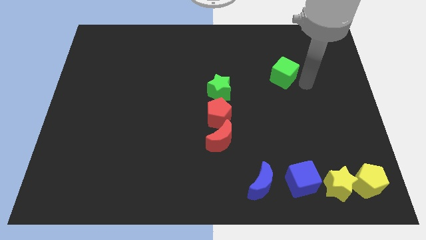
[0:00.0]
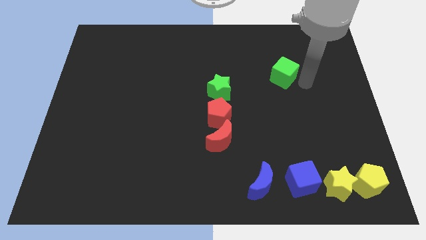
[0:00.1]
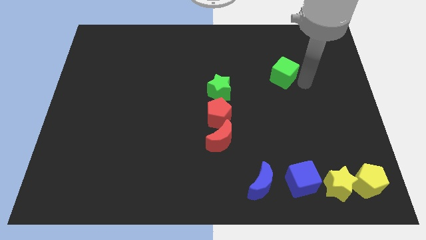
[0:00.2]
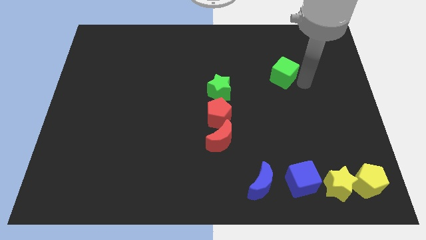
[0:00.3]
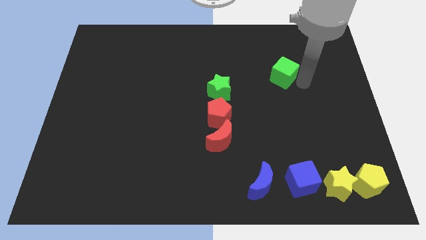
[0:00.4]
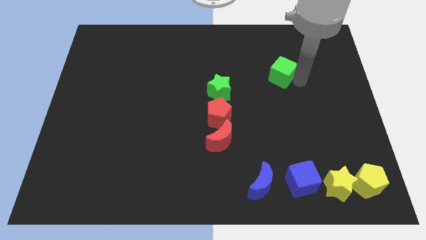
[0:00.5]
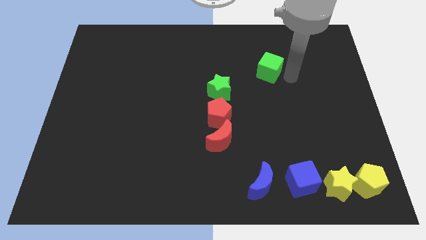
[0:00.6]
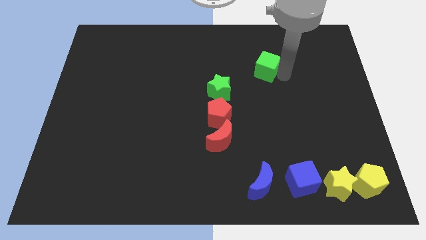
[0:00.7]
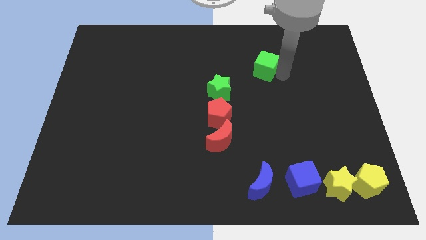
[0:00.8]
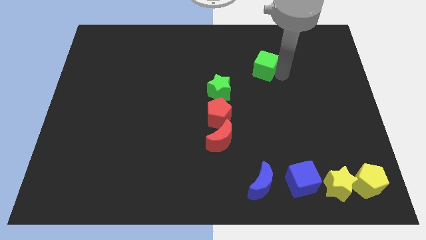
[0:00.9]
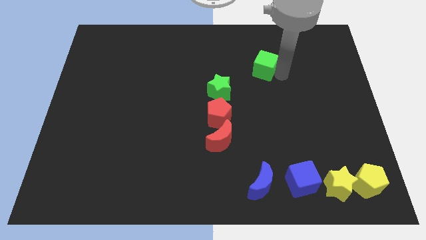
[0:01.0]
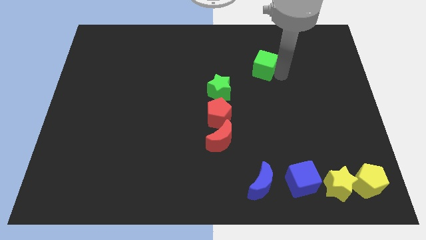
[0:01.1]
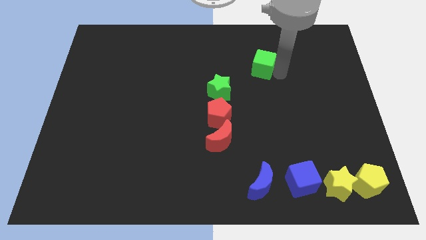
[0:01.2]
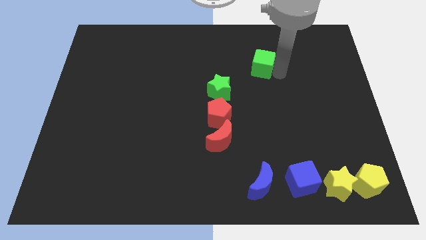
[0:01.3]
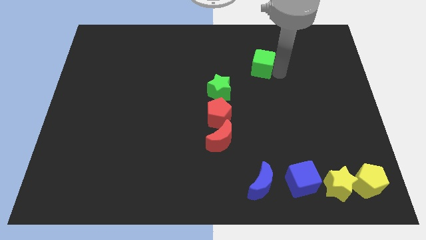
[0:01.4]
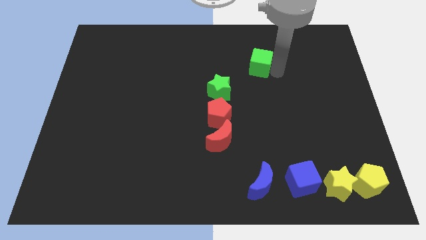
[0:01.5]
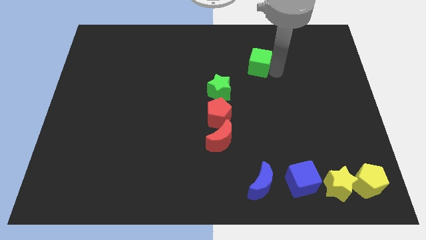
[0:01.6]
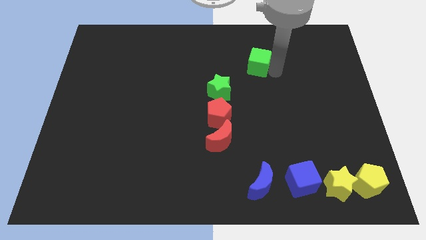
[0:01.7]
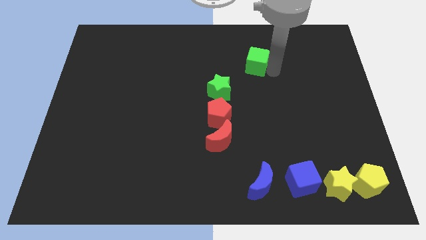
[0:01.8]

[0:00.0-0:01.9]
place the green cube diagonally right to green star

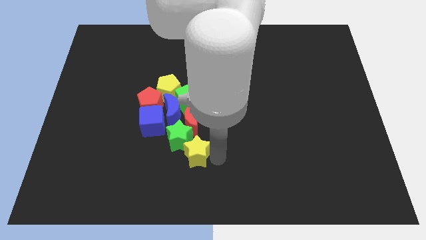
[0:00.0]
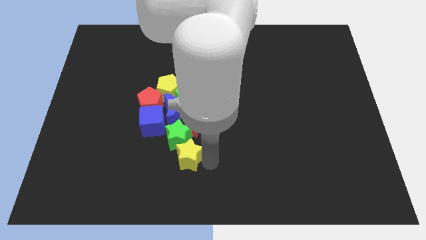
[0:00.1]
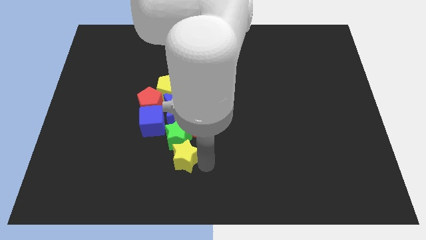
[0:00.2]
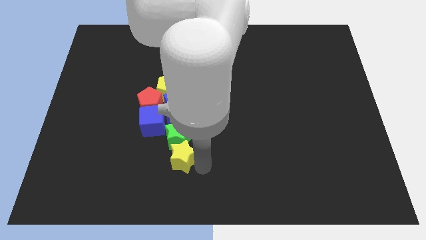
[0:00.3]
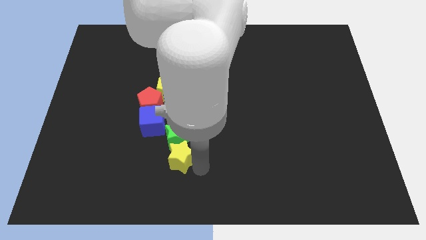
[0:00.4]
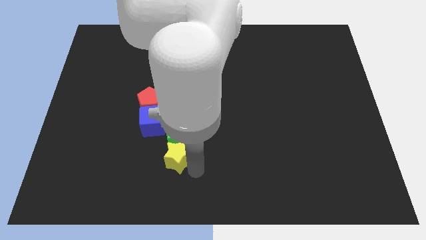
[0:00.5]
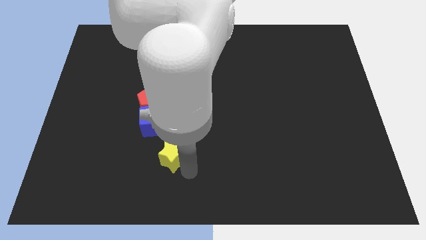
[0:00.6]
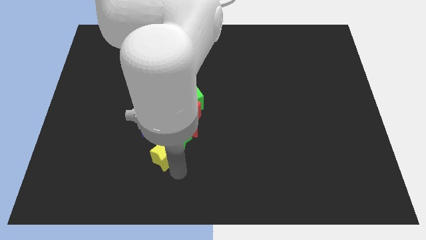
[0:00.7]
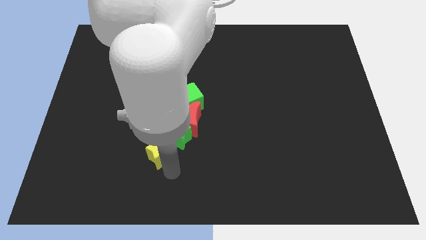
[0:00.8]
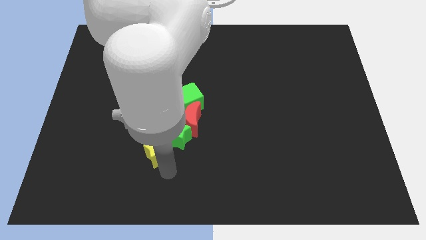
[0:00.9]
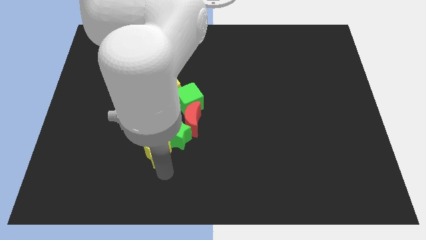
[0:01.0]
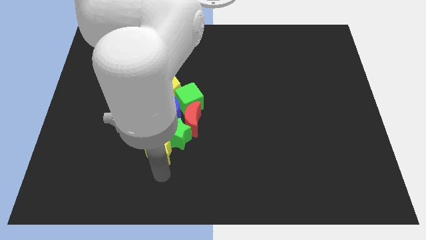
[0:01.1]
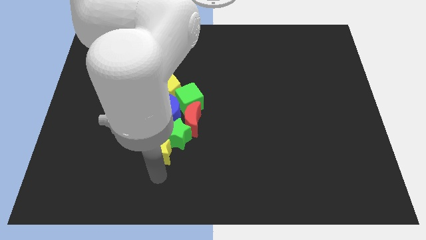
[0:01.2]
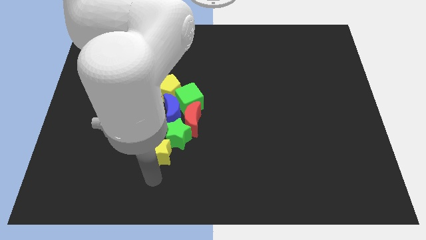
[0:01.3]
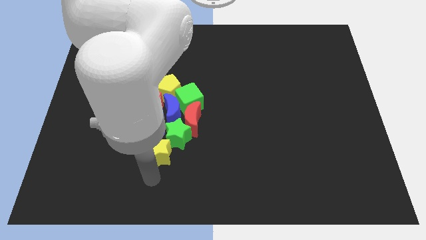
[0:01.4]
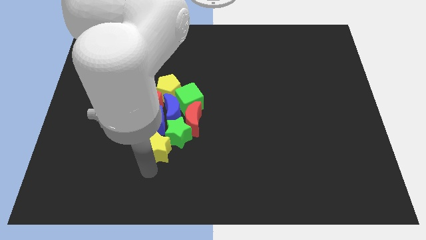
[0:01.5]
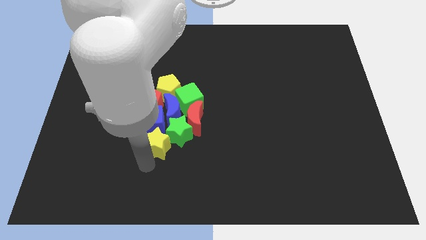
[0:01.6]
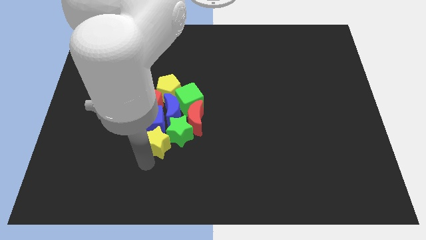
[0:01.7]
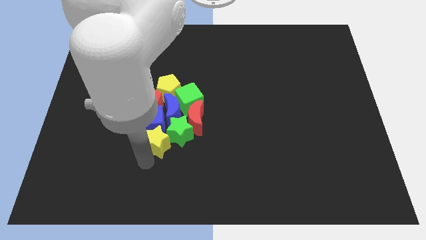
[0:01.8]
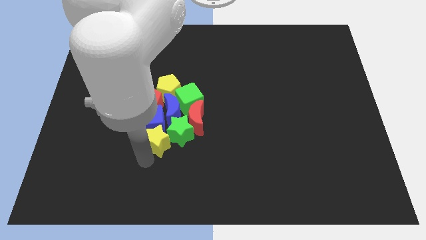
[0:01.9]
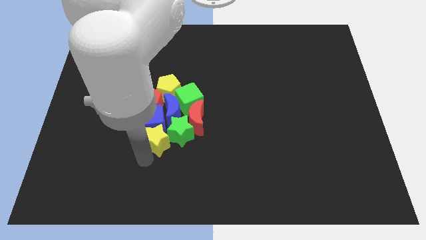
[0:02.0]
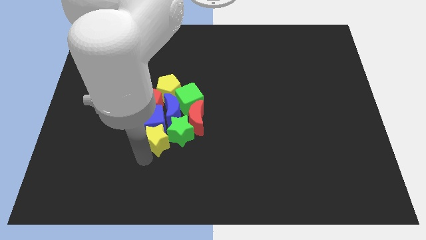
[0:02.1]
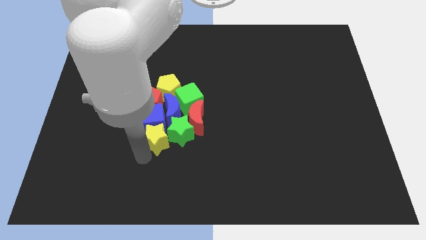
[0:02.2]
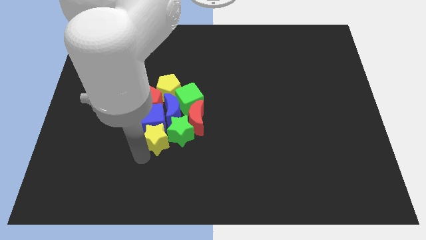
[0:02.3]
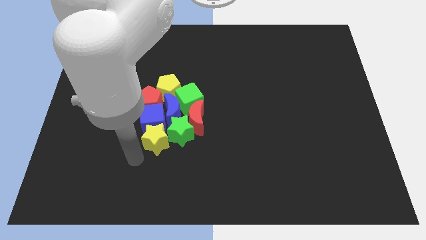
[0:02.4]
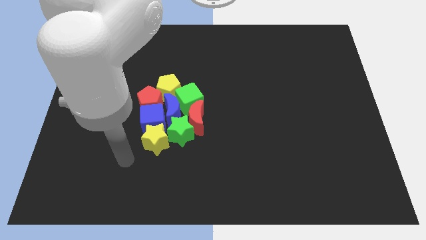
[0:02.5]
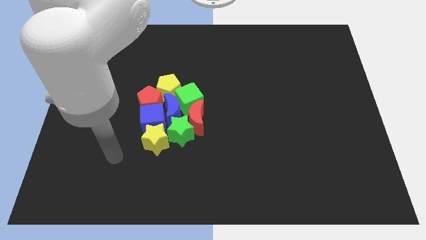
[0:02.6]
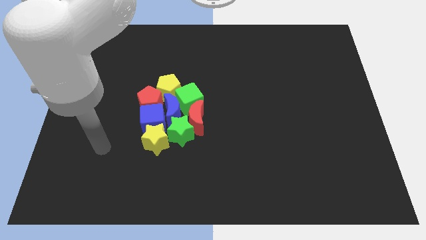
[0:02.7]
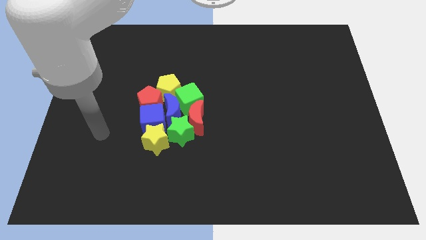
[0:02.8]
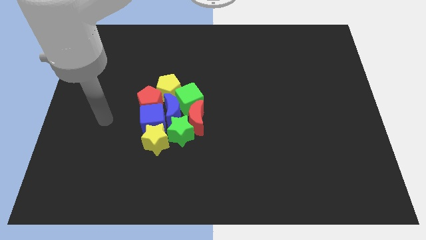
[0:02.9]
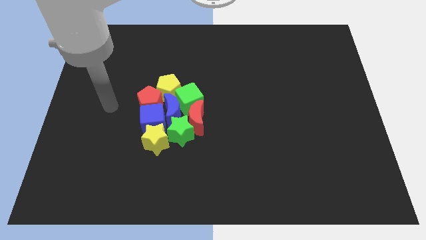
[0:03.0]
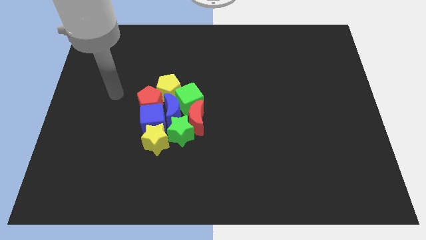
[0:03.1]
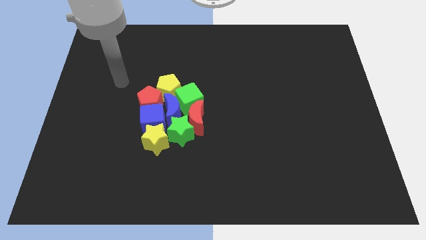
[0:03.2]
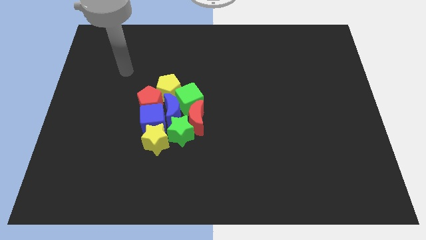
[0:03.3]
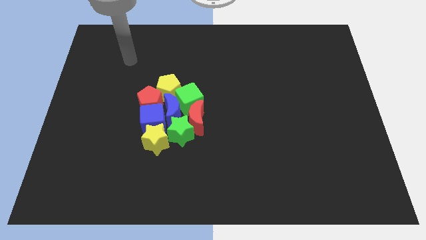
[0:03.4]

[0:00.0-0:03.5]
move the yellow star to the bottom of the blue cube

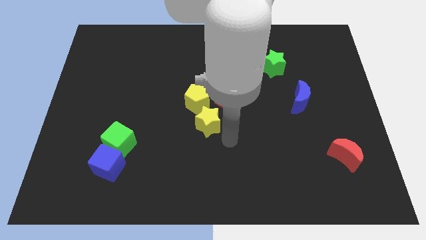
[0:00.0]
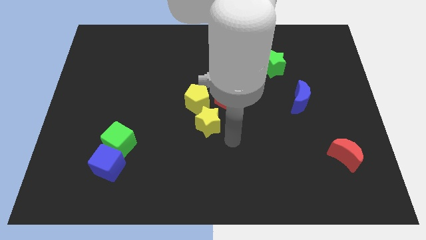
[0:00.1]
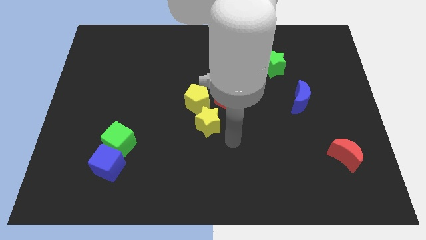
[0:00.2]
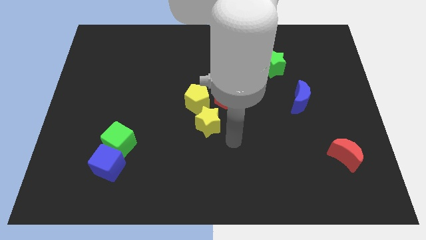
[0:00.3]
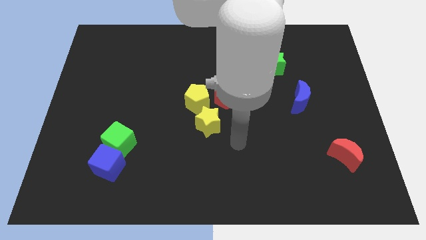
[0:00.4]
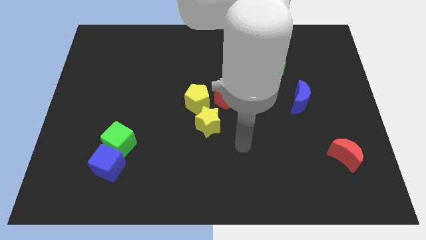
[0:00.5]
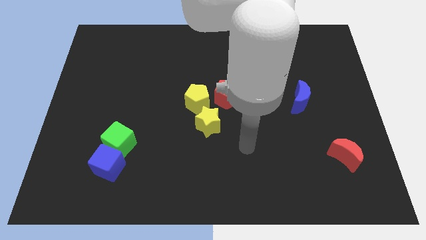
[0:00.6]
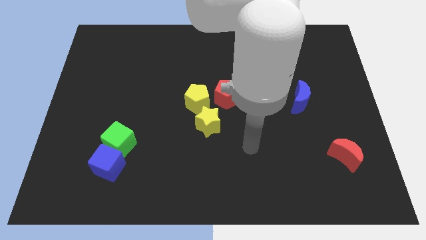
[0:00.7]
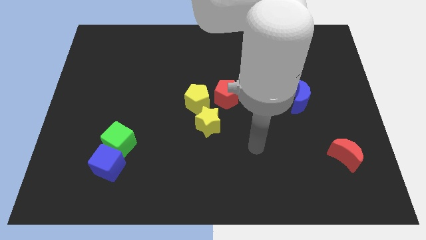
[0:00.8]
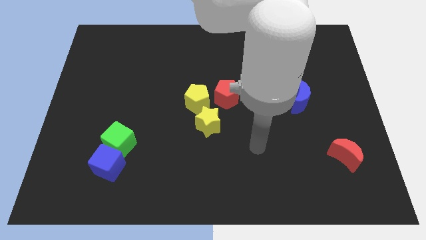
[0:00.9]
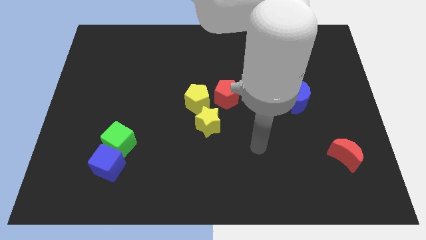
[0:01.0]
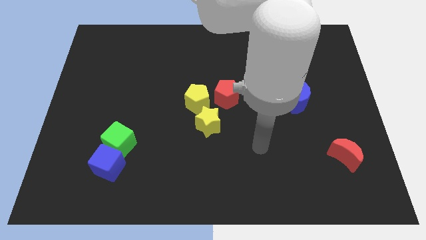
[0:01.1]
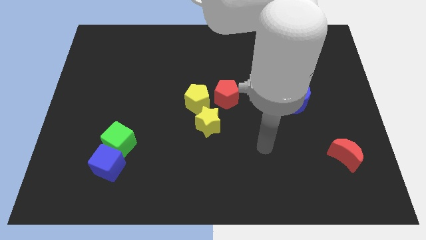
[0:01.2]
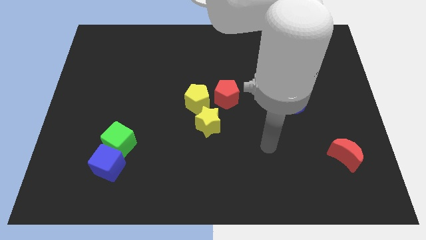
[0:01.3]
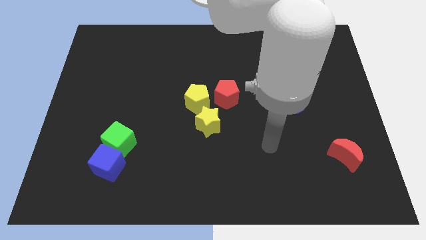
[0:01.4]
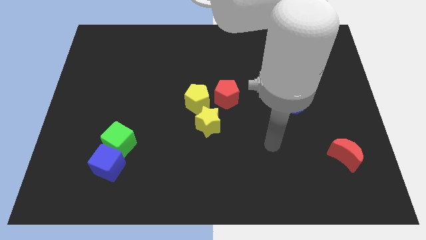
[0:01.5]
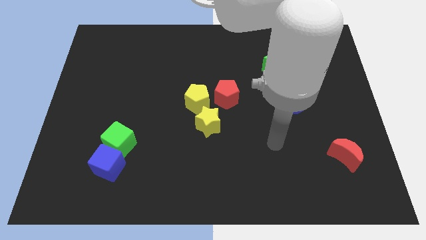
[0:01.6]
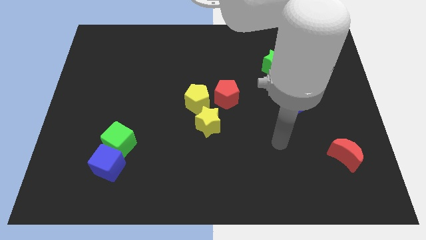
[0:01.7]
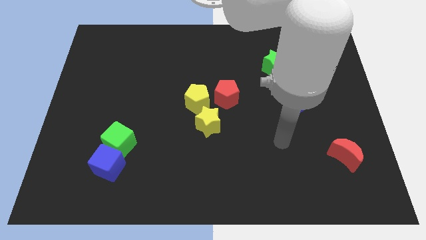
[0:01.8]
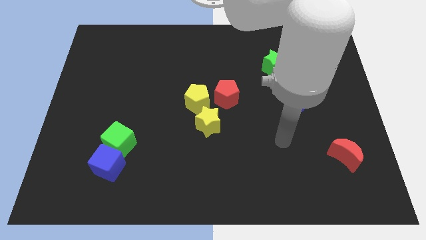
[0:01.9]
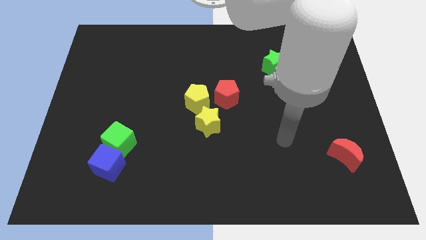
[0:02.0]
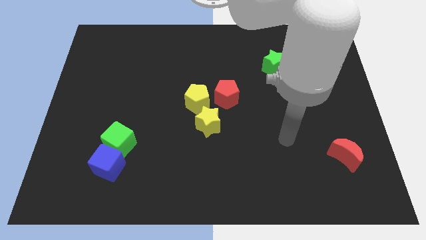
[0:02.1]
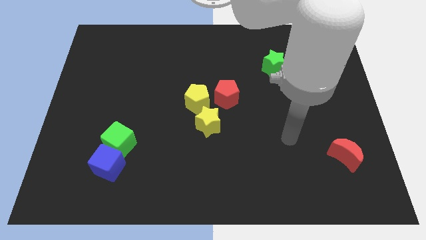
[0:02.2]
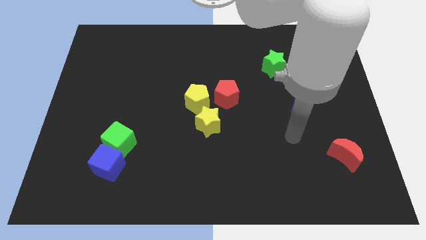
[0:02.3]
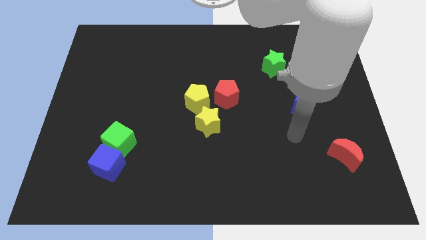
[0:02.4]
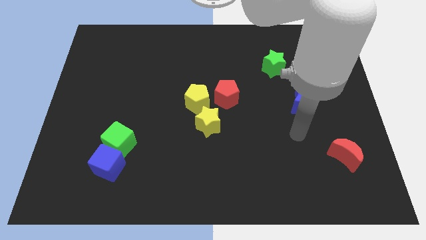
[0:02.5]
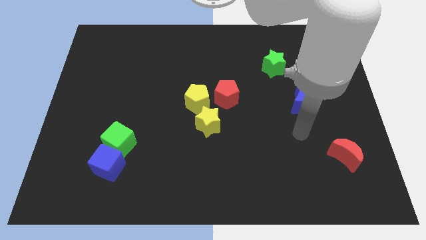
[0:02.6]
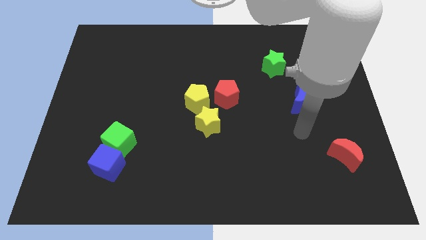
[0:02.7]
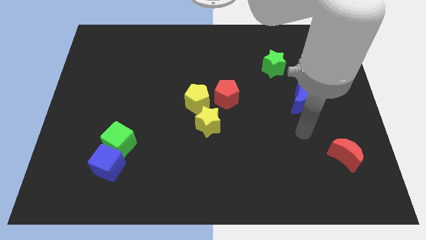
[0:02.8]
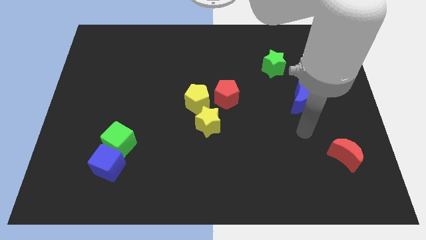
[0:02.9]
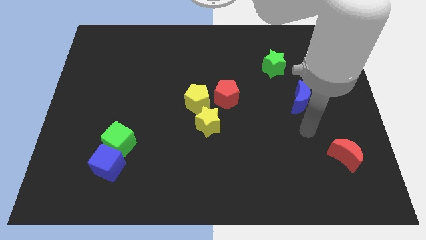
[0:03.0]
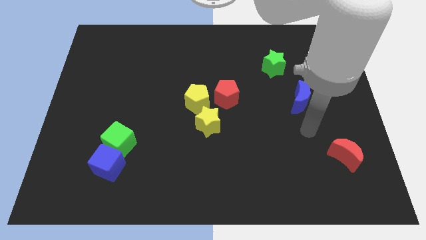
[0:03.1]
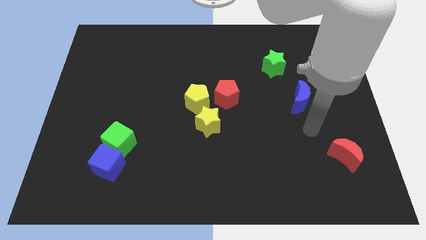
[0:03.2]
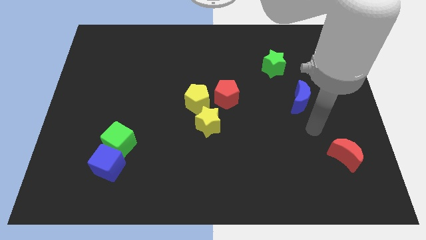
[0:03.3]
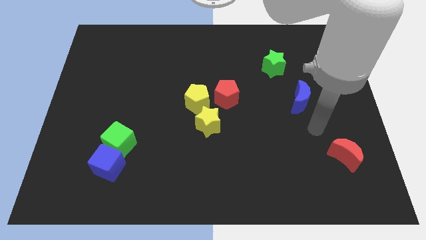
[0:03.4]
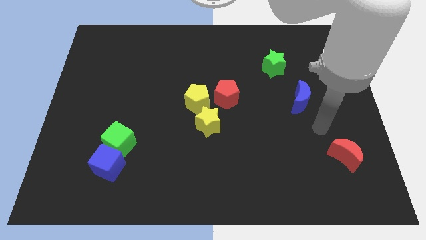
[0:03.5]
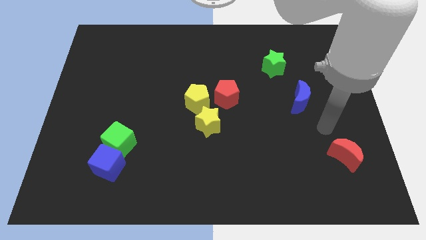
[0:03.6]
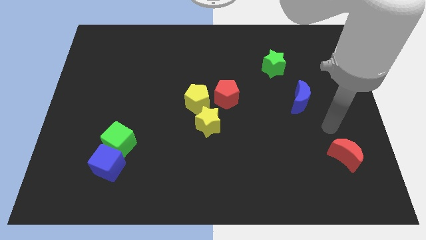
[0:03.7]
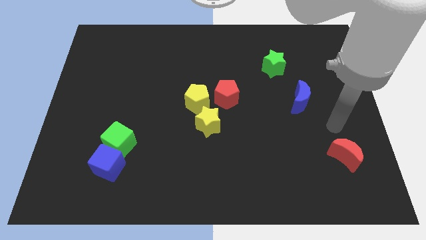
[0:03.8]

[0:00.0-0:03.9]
point your arm at the top of the red crescent
